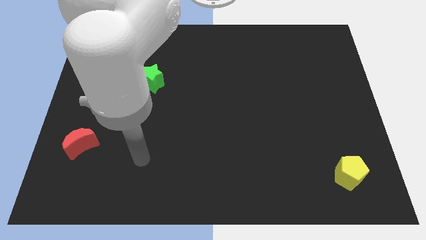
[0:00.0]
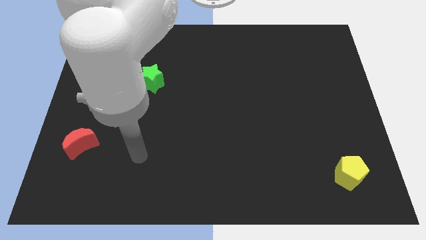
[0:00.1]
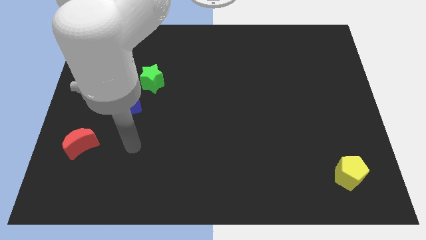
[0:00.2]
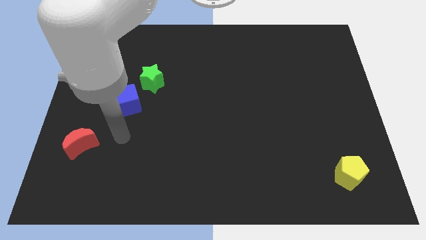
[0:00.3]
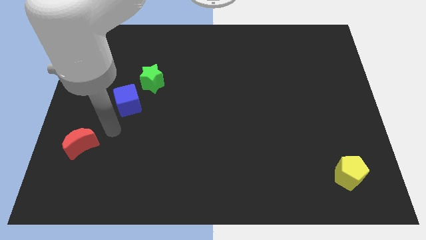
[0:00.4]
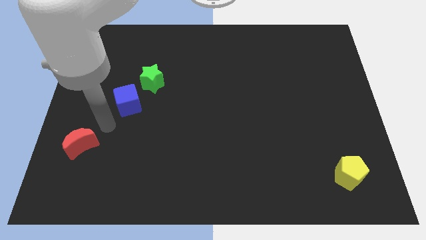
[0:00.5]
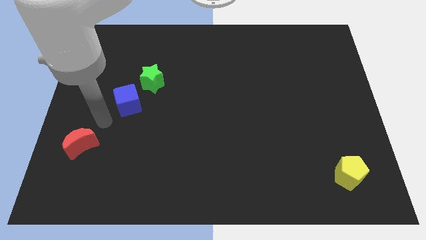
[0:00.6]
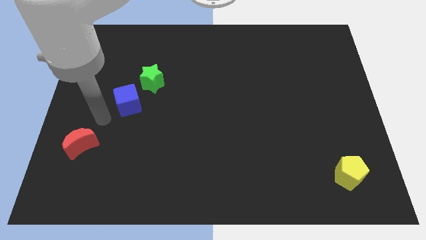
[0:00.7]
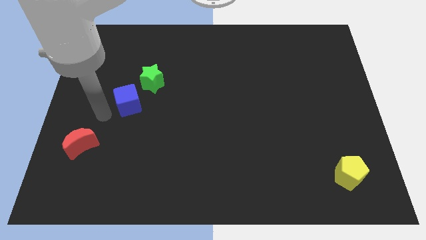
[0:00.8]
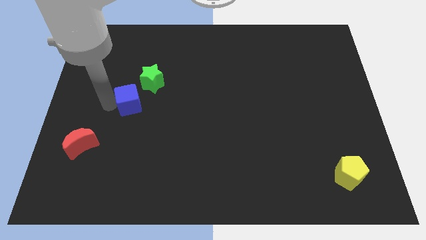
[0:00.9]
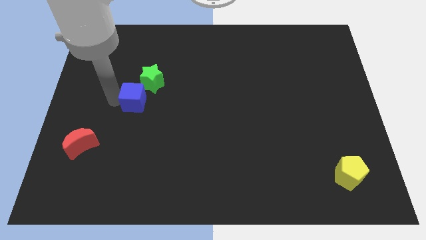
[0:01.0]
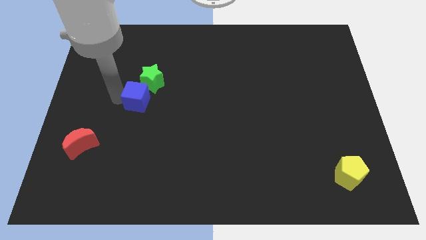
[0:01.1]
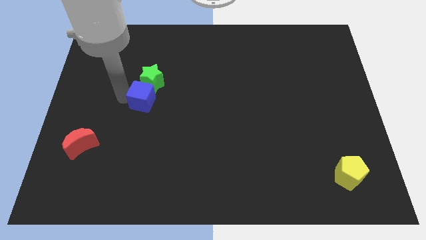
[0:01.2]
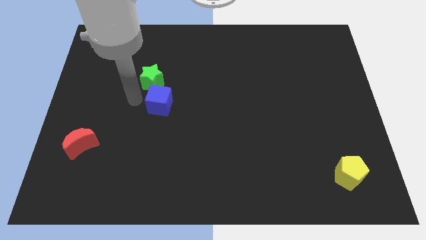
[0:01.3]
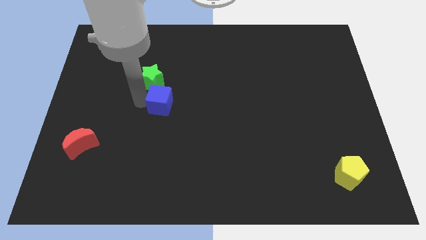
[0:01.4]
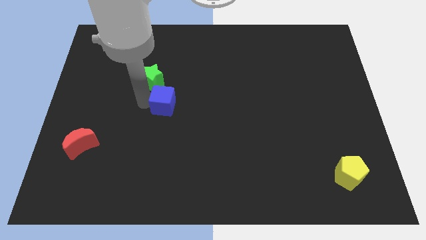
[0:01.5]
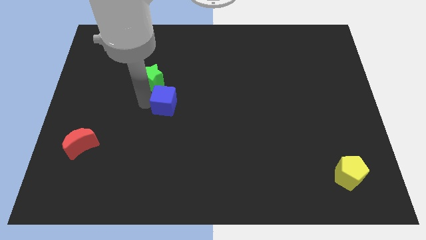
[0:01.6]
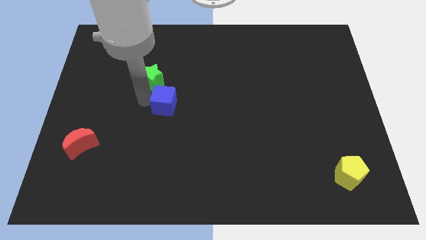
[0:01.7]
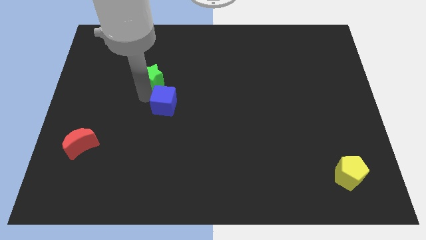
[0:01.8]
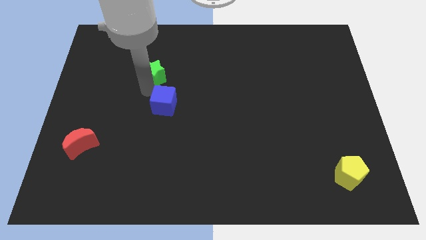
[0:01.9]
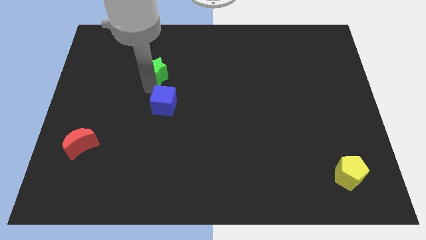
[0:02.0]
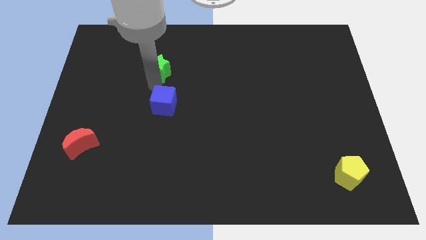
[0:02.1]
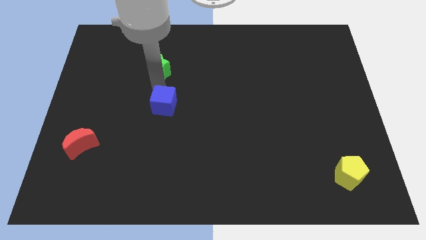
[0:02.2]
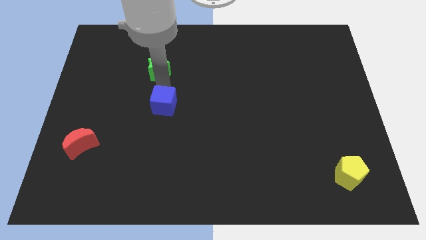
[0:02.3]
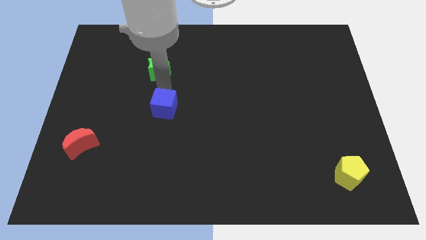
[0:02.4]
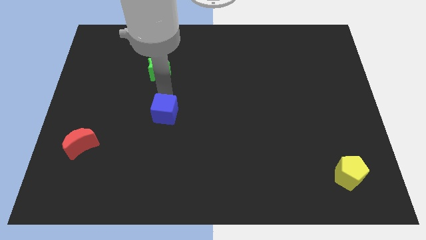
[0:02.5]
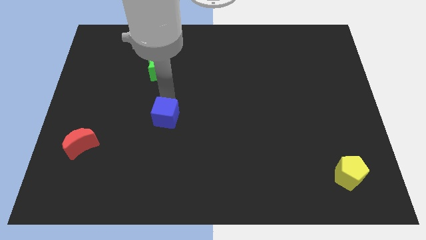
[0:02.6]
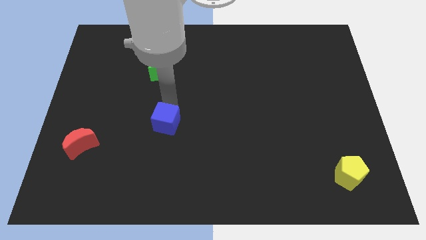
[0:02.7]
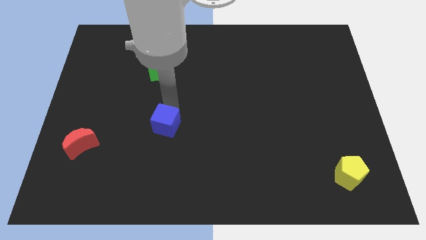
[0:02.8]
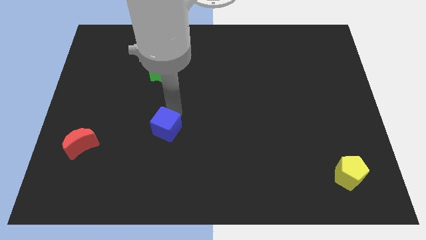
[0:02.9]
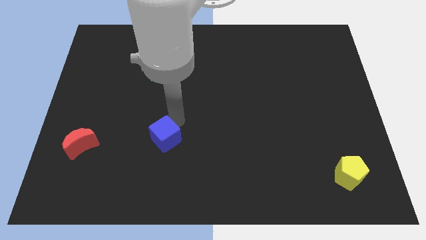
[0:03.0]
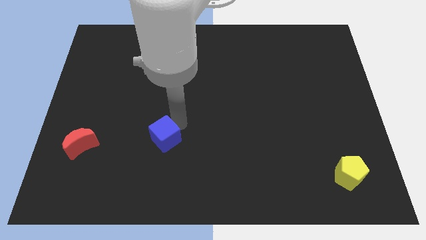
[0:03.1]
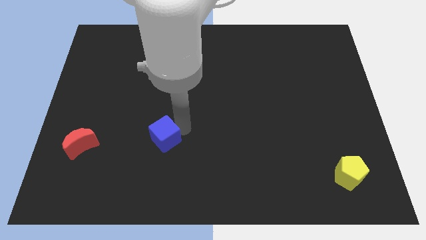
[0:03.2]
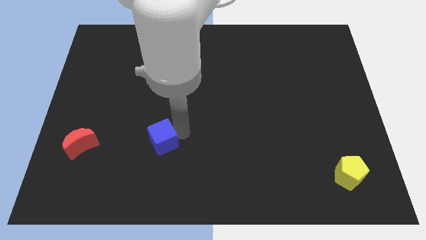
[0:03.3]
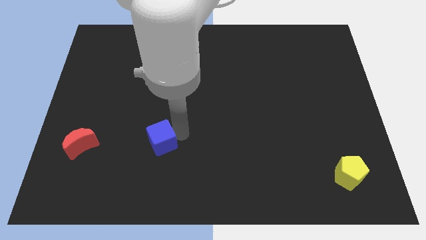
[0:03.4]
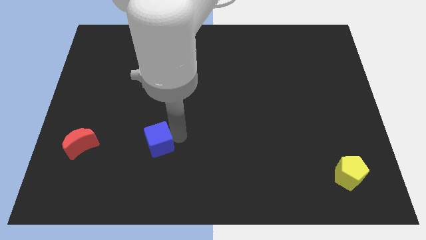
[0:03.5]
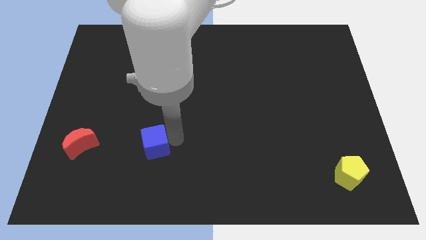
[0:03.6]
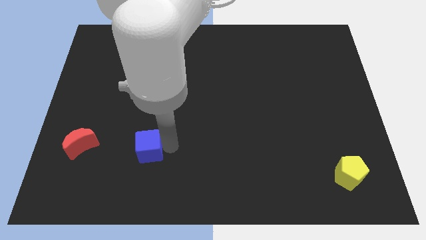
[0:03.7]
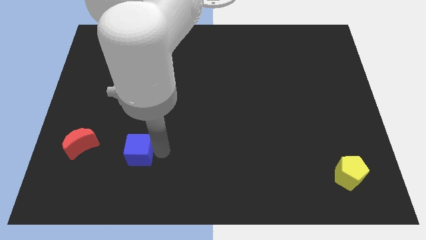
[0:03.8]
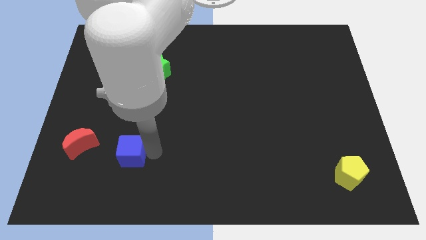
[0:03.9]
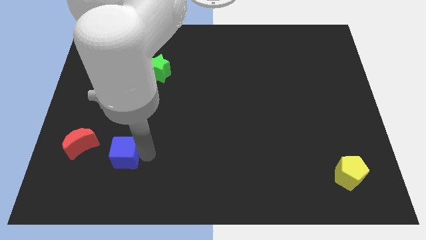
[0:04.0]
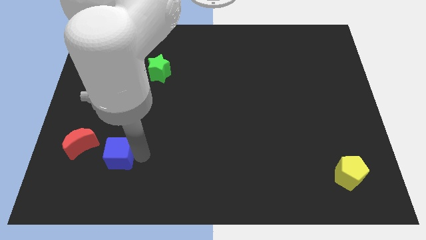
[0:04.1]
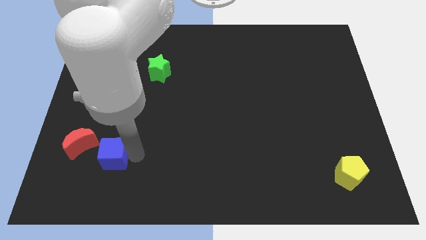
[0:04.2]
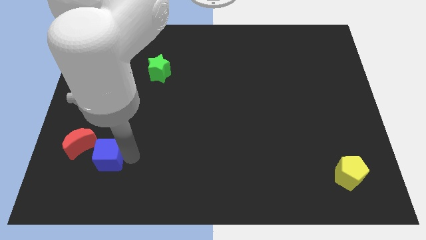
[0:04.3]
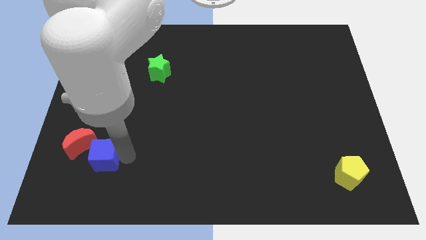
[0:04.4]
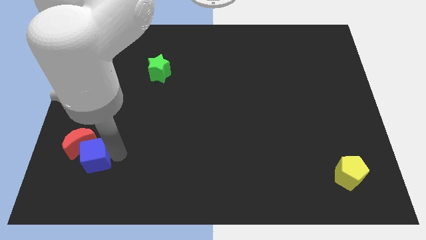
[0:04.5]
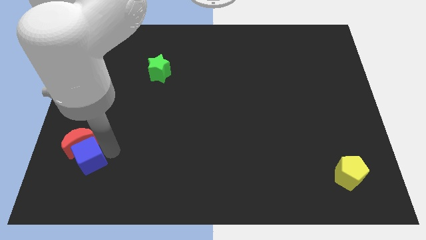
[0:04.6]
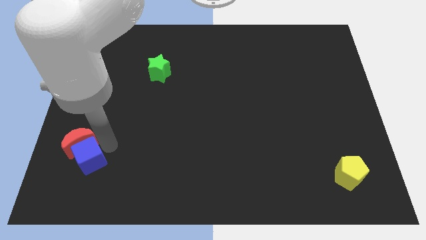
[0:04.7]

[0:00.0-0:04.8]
move the cube next to the red block

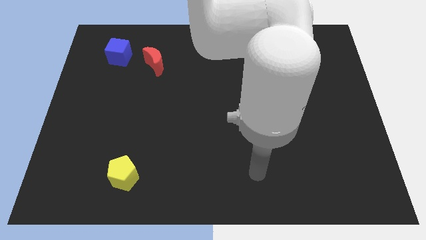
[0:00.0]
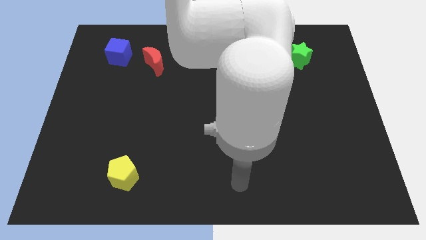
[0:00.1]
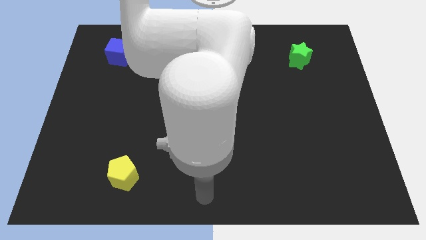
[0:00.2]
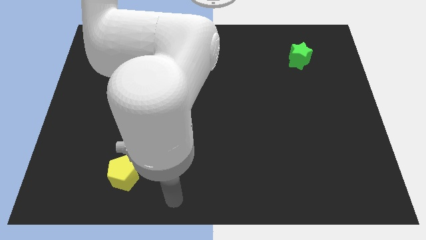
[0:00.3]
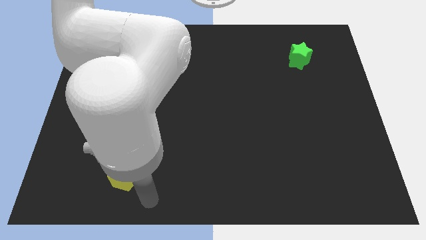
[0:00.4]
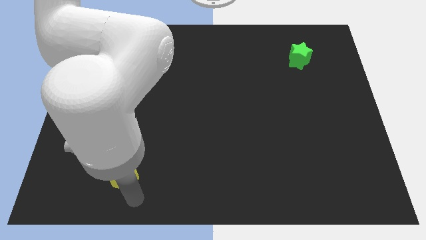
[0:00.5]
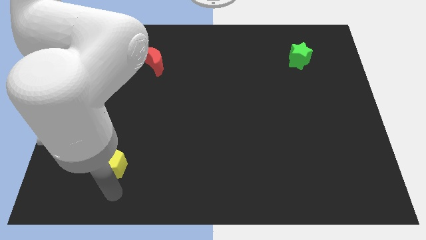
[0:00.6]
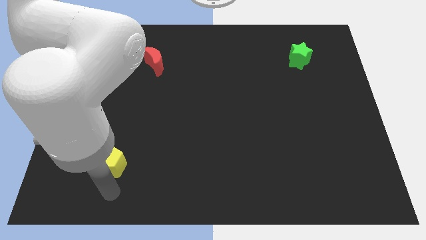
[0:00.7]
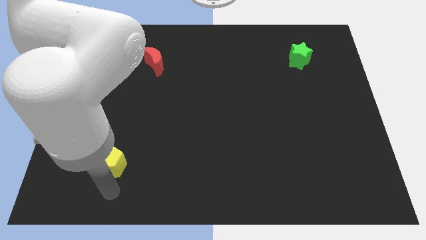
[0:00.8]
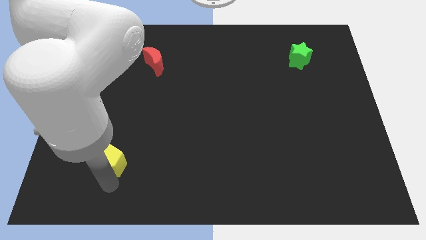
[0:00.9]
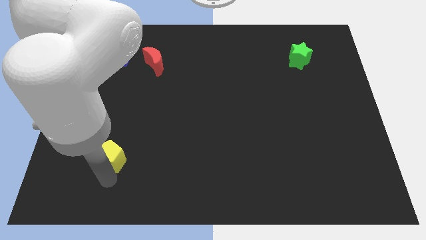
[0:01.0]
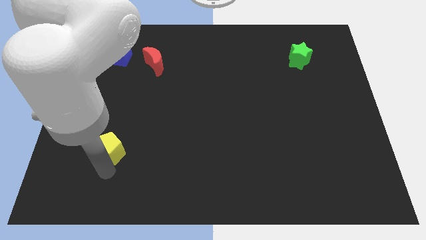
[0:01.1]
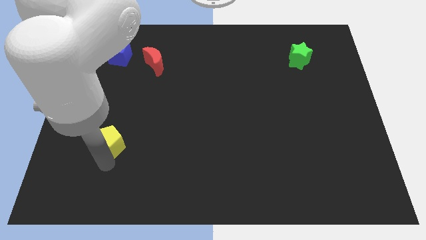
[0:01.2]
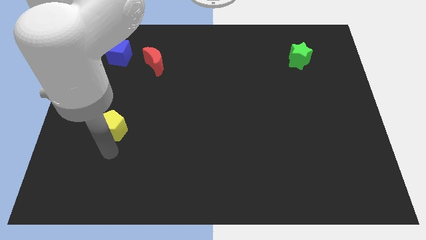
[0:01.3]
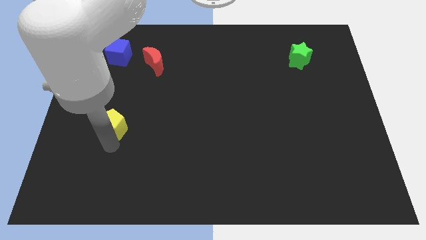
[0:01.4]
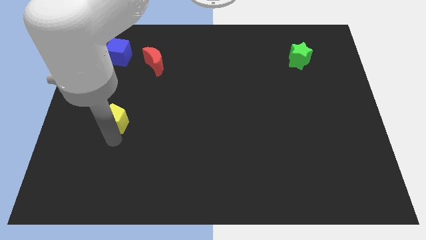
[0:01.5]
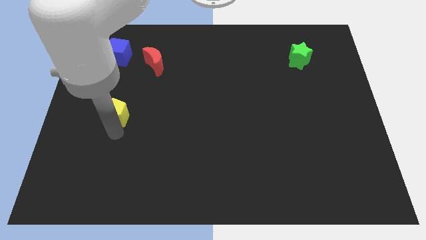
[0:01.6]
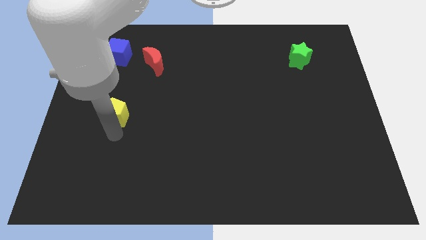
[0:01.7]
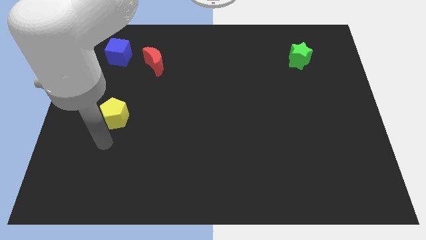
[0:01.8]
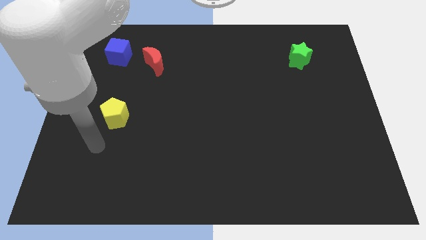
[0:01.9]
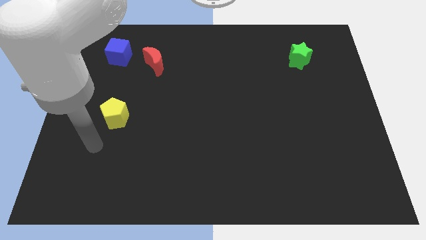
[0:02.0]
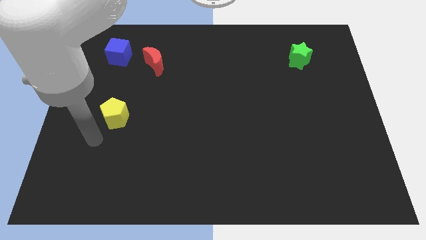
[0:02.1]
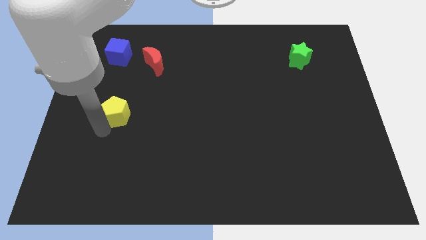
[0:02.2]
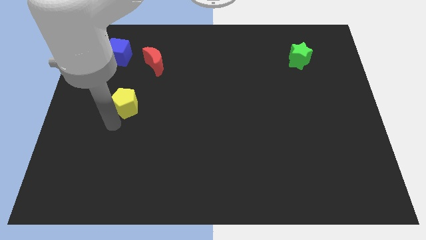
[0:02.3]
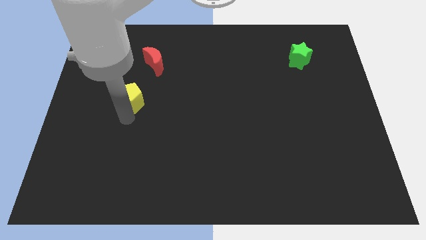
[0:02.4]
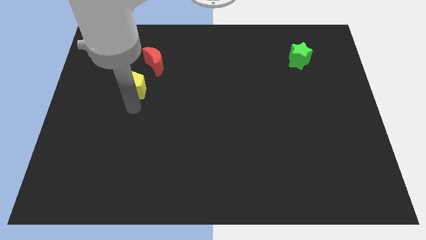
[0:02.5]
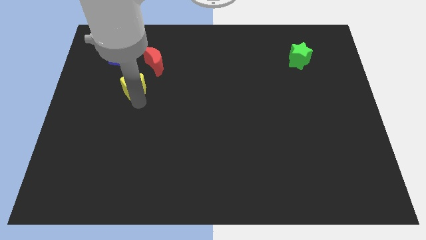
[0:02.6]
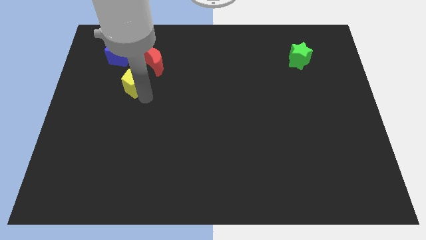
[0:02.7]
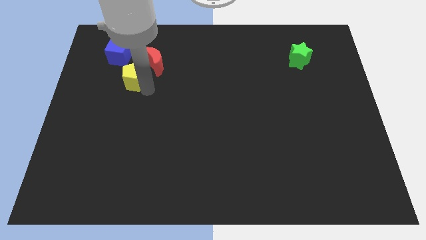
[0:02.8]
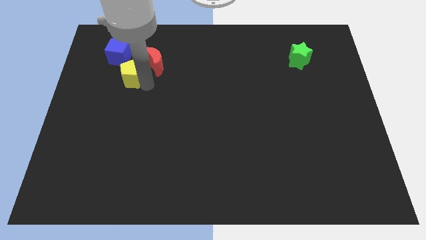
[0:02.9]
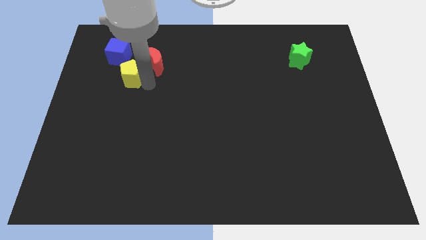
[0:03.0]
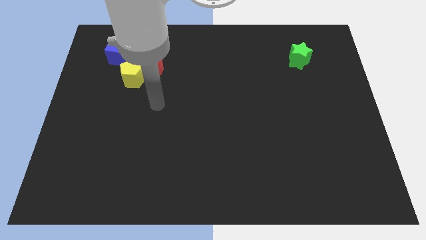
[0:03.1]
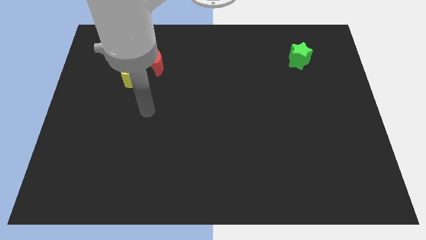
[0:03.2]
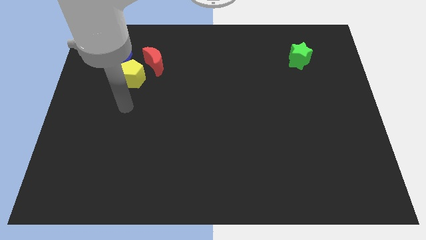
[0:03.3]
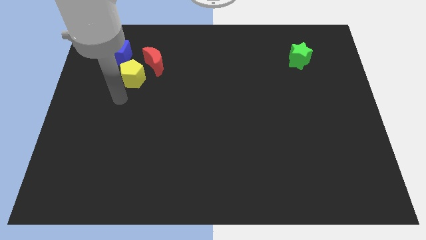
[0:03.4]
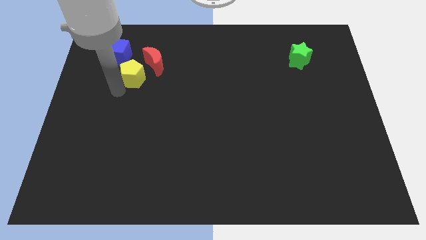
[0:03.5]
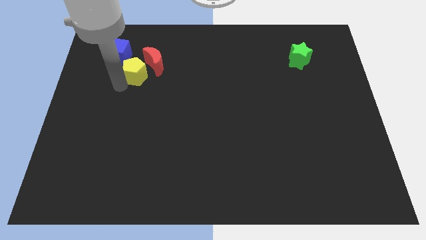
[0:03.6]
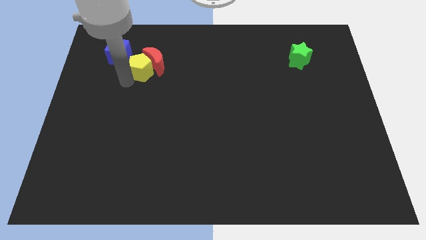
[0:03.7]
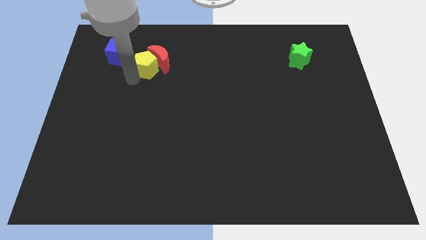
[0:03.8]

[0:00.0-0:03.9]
slide the pentagon towards the moon
